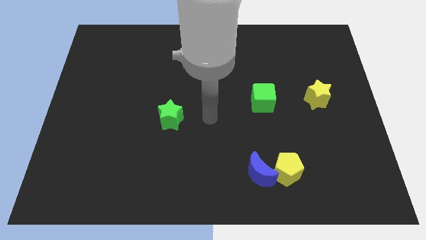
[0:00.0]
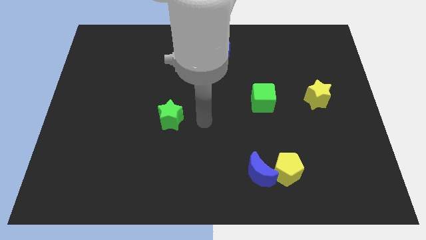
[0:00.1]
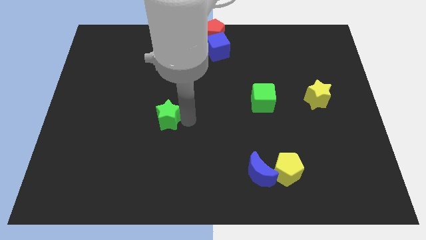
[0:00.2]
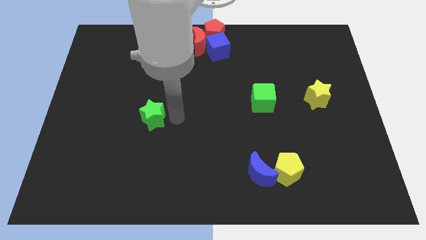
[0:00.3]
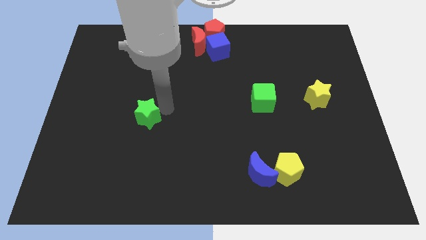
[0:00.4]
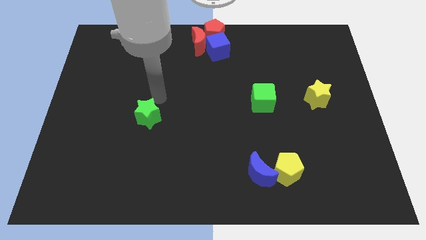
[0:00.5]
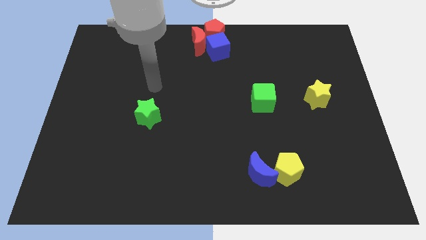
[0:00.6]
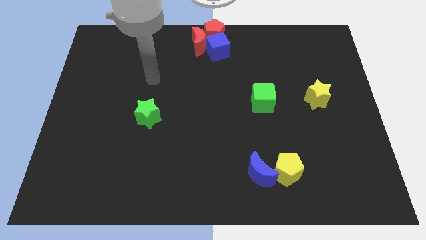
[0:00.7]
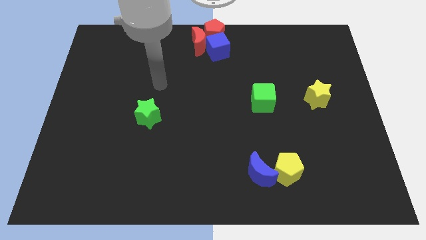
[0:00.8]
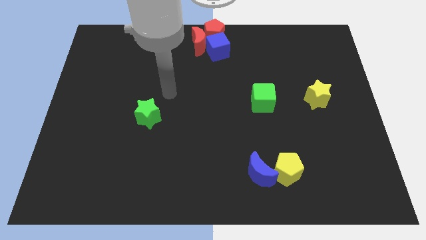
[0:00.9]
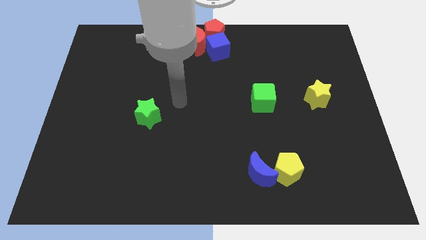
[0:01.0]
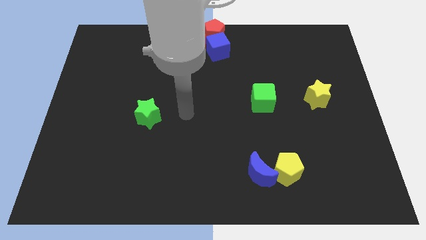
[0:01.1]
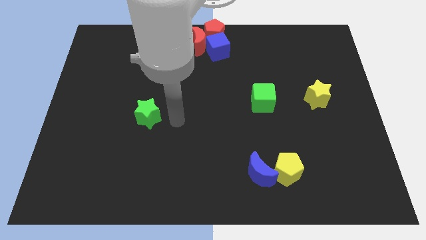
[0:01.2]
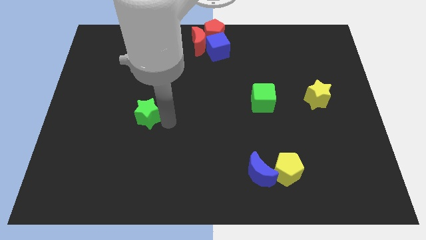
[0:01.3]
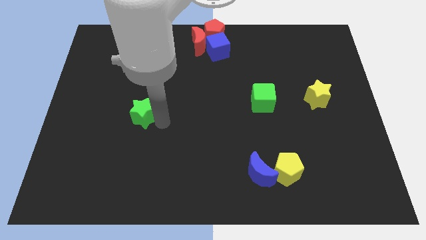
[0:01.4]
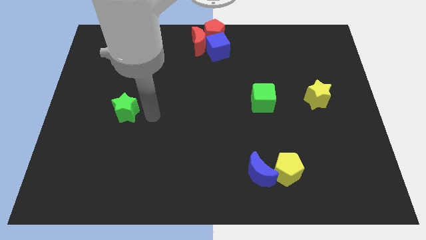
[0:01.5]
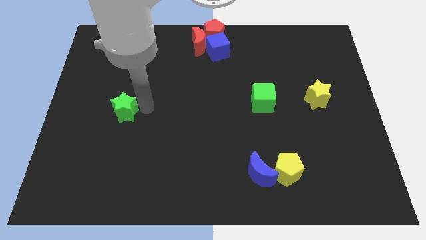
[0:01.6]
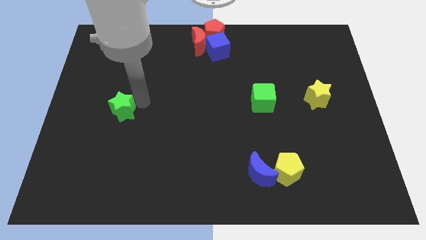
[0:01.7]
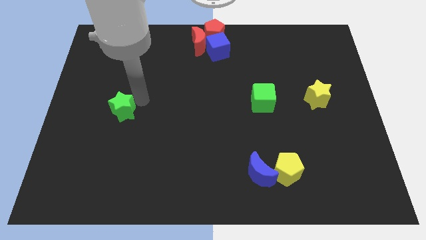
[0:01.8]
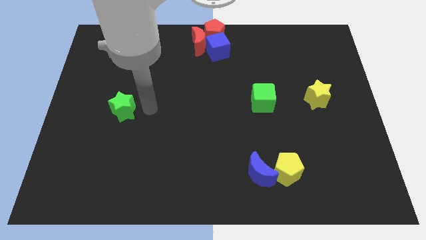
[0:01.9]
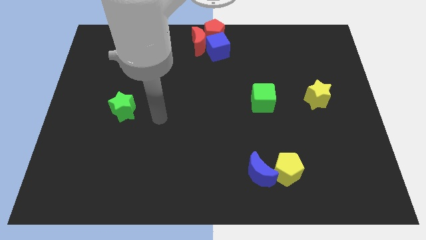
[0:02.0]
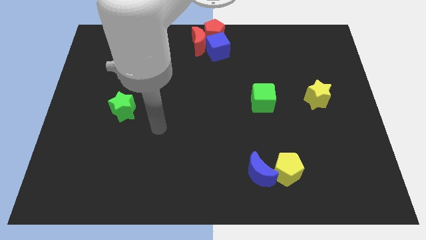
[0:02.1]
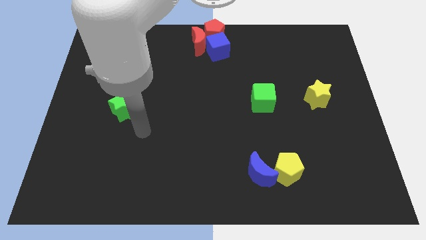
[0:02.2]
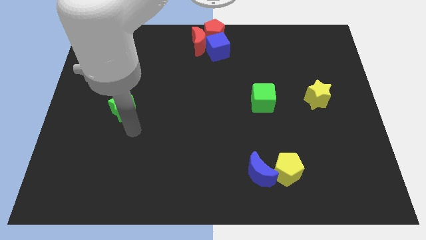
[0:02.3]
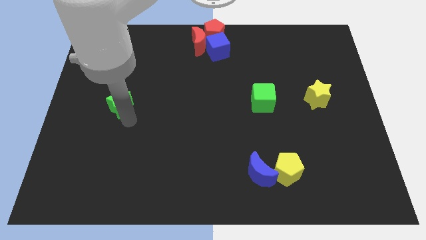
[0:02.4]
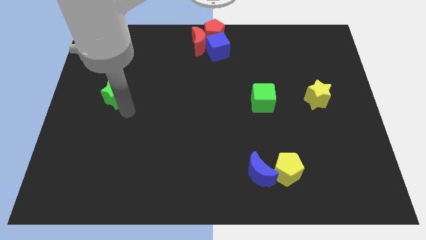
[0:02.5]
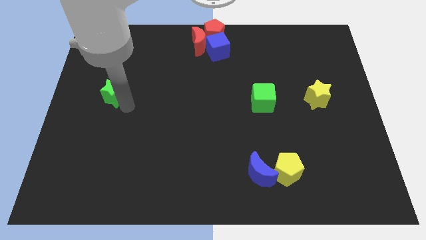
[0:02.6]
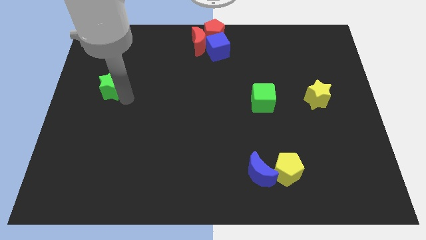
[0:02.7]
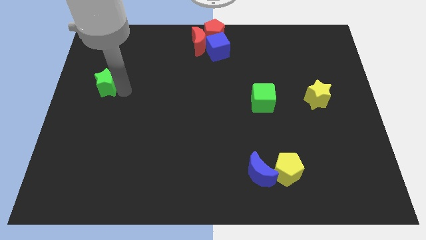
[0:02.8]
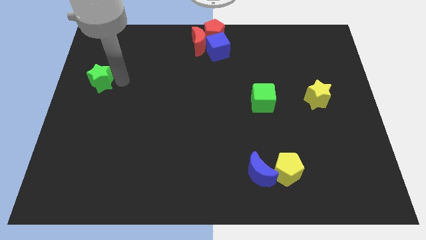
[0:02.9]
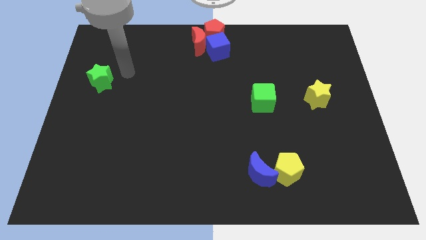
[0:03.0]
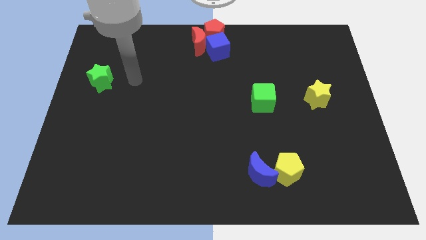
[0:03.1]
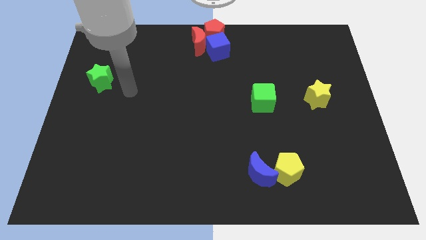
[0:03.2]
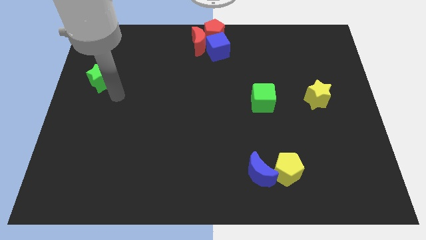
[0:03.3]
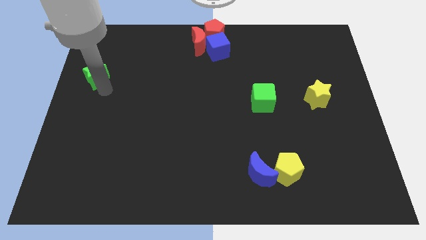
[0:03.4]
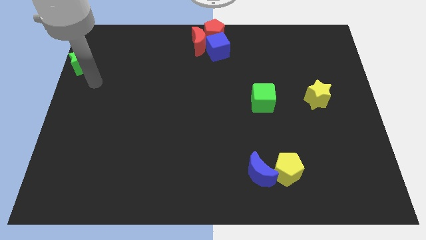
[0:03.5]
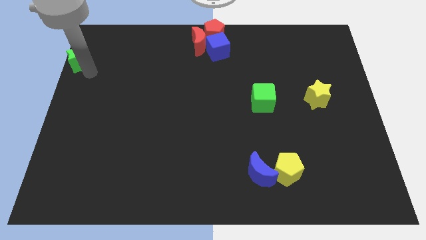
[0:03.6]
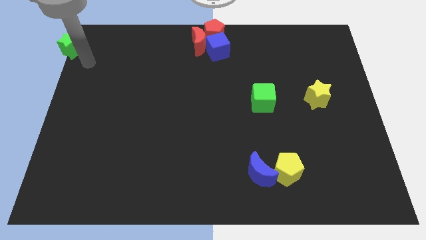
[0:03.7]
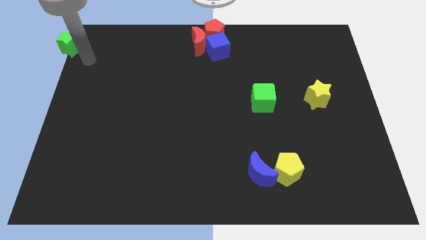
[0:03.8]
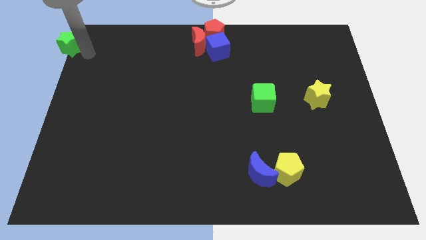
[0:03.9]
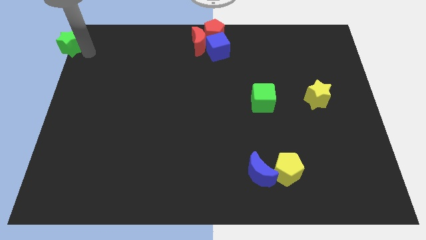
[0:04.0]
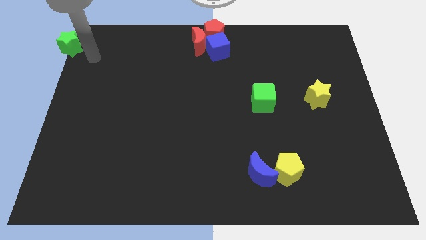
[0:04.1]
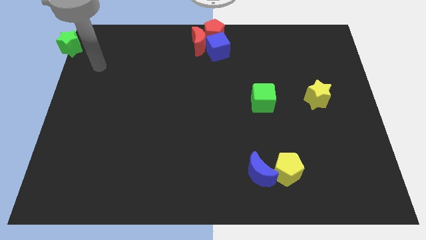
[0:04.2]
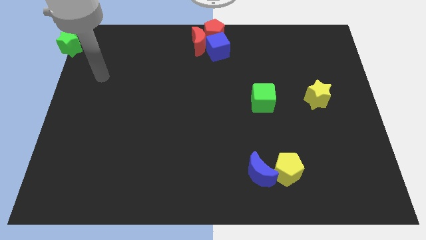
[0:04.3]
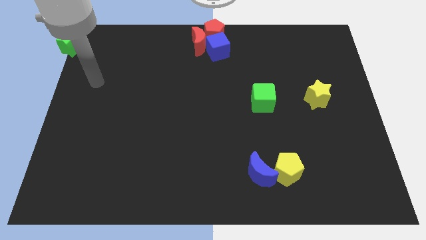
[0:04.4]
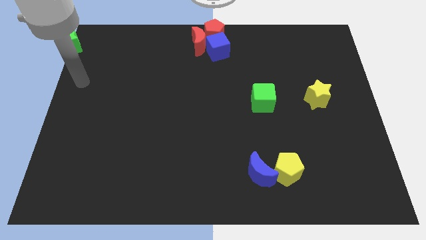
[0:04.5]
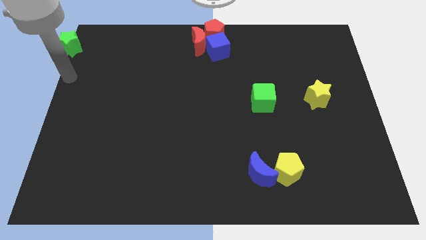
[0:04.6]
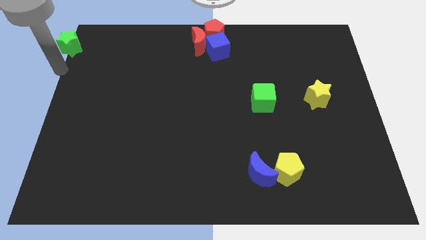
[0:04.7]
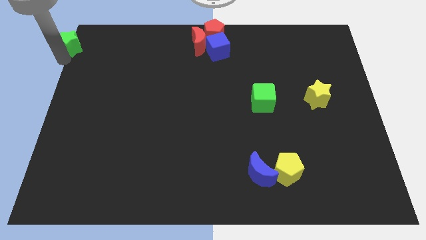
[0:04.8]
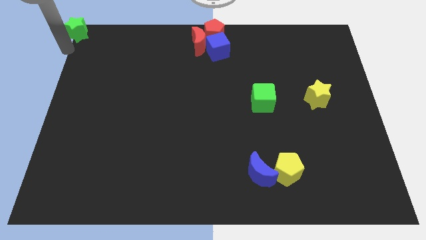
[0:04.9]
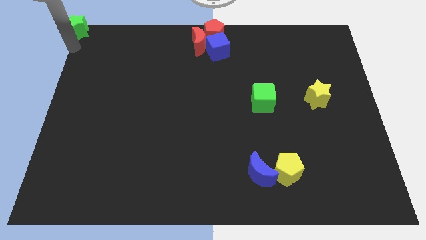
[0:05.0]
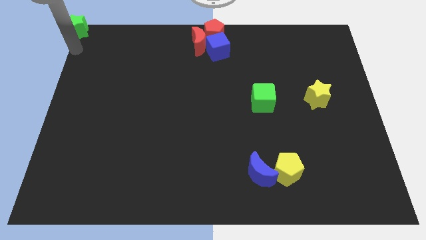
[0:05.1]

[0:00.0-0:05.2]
push the green star to the top left corner

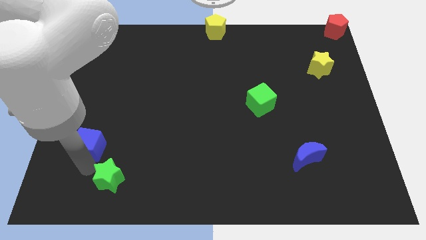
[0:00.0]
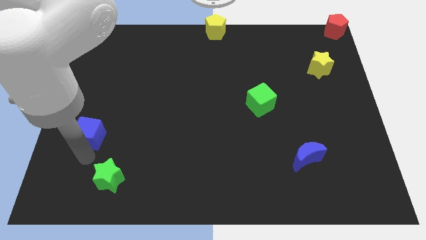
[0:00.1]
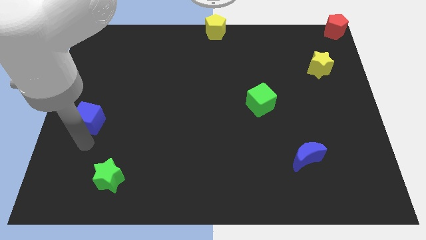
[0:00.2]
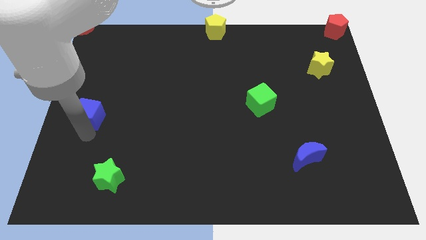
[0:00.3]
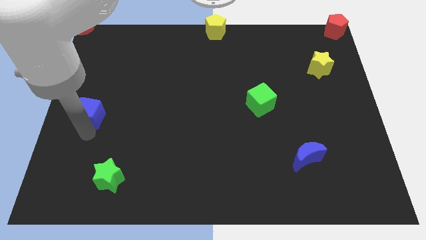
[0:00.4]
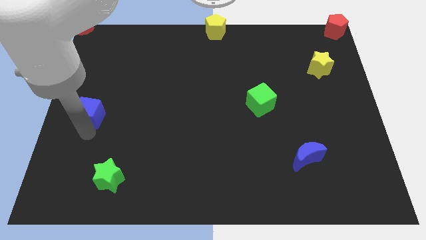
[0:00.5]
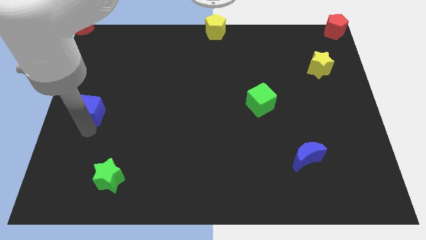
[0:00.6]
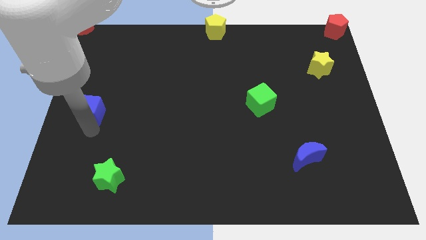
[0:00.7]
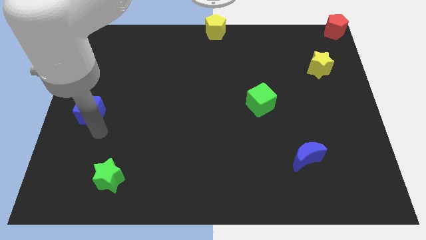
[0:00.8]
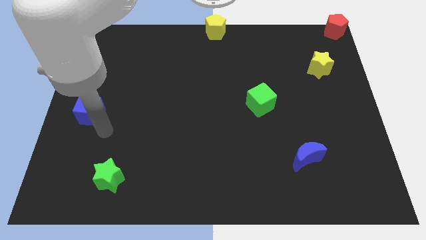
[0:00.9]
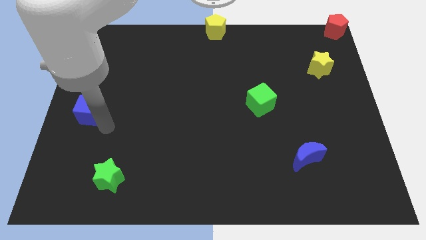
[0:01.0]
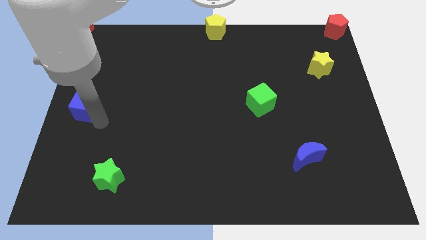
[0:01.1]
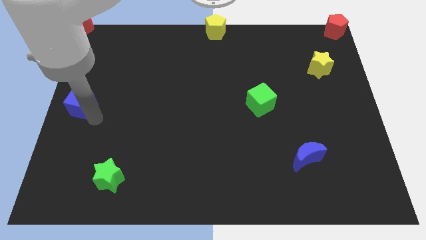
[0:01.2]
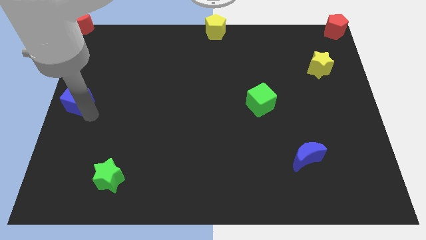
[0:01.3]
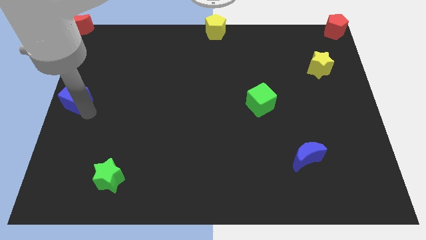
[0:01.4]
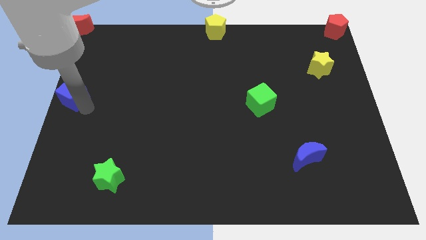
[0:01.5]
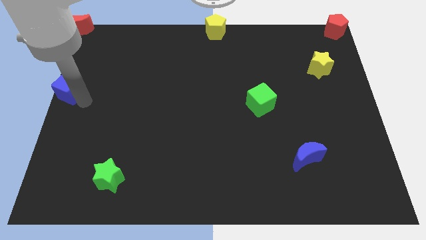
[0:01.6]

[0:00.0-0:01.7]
push the blue cube to the left center of the board

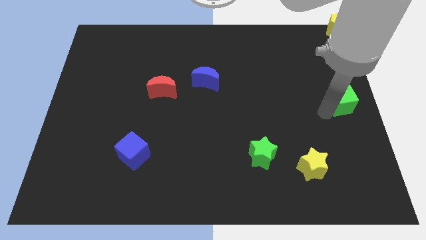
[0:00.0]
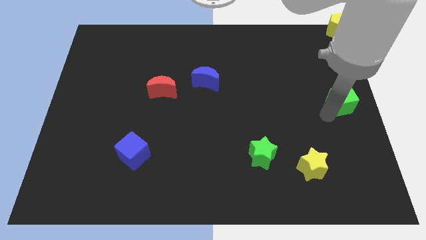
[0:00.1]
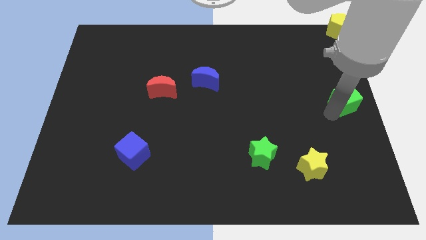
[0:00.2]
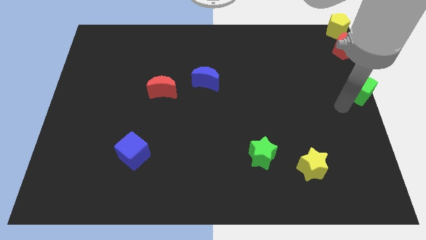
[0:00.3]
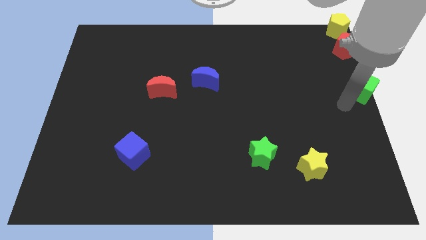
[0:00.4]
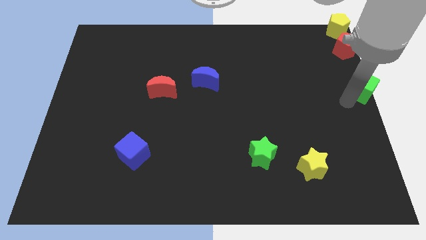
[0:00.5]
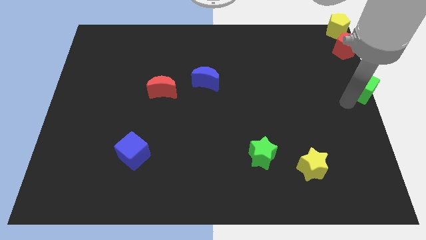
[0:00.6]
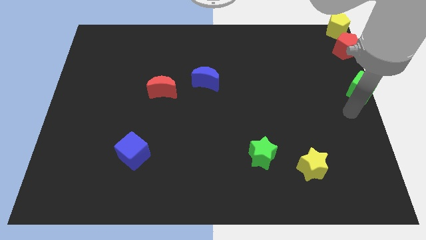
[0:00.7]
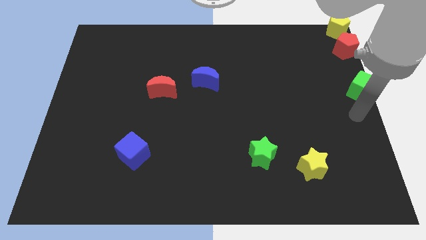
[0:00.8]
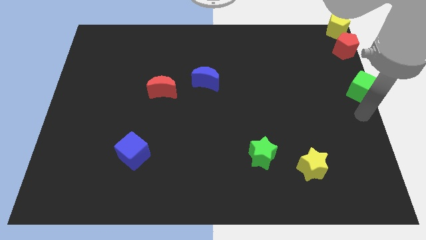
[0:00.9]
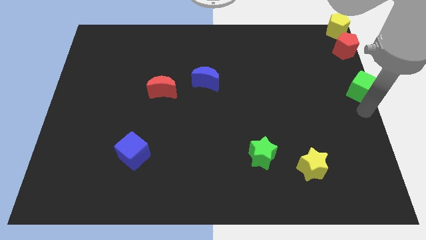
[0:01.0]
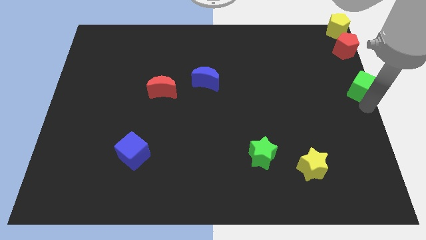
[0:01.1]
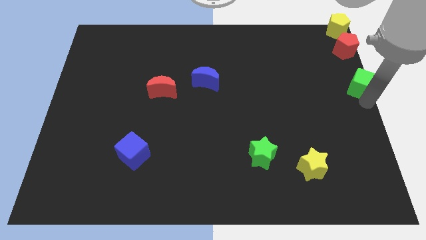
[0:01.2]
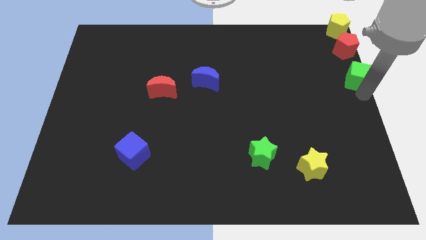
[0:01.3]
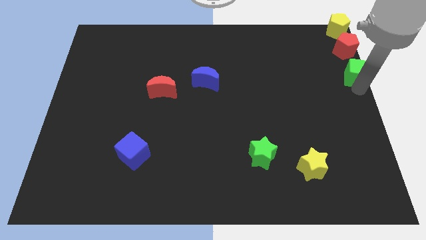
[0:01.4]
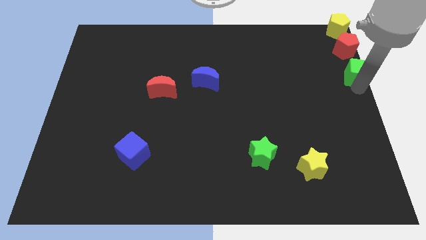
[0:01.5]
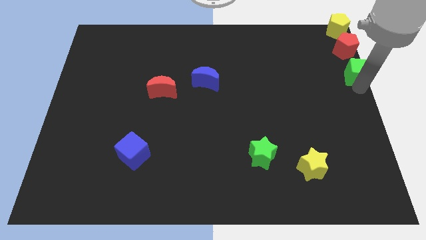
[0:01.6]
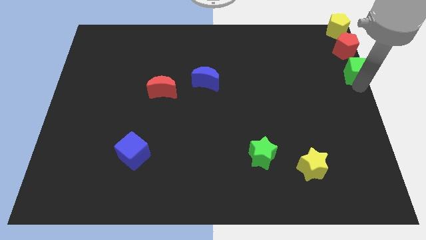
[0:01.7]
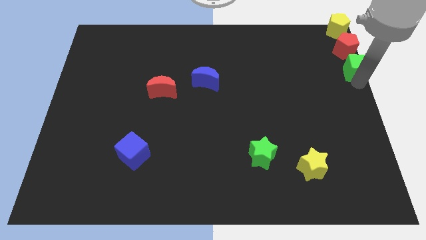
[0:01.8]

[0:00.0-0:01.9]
push green cube close to the red pentagon

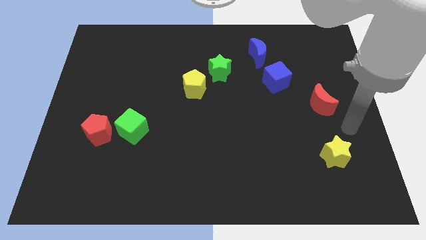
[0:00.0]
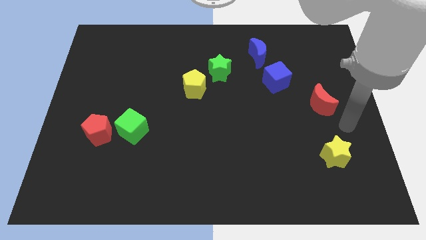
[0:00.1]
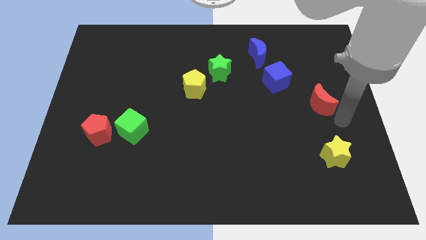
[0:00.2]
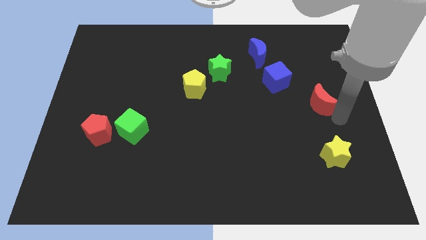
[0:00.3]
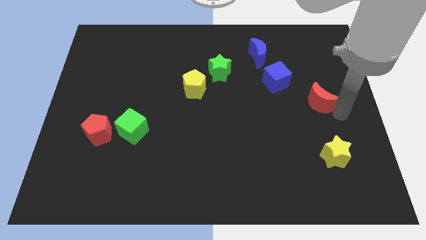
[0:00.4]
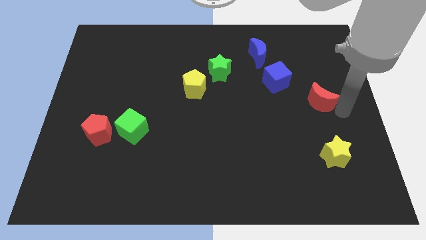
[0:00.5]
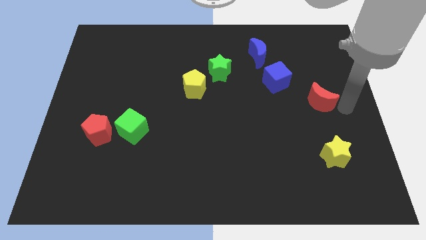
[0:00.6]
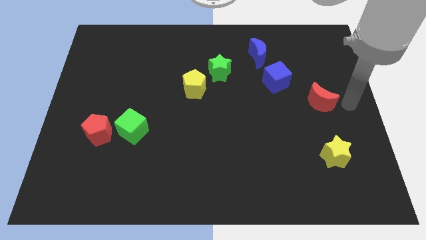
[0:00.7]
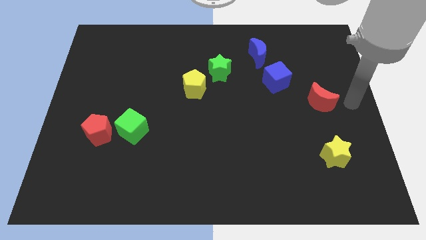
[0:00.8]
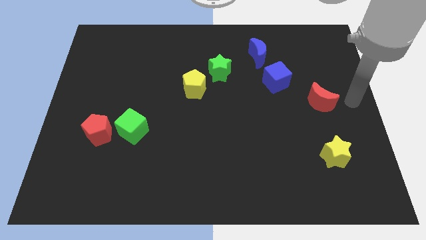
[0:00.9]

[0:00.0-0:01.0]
slightly touch the red crescent
